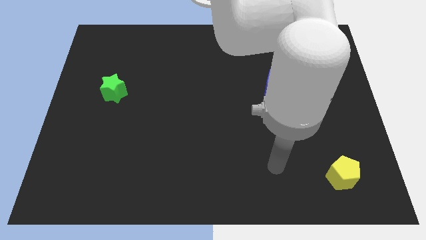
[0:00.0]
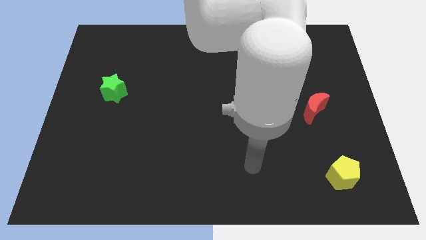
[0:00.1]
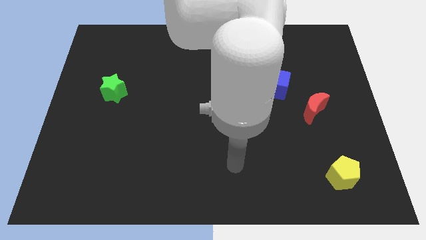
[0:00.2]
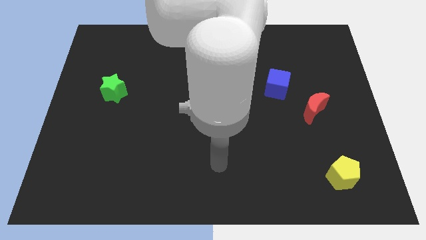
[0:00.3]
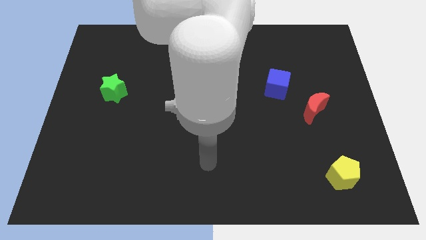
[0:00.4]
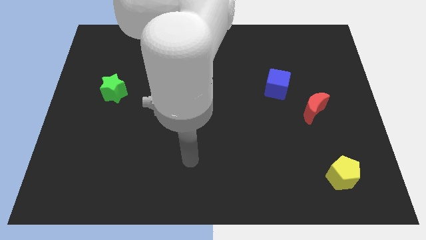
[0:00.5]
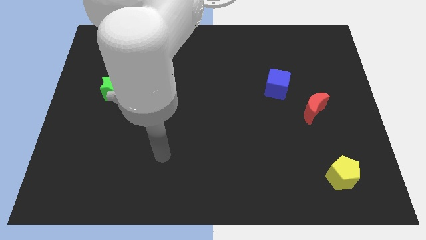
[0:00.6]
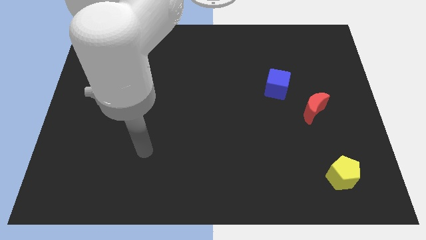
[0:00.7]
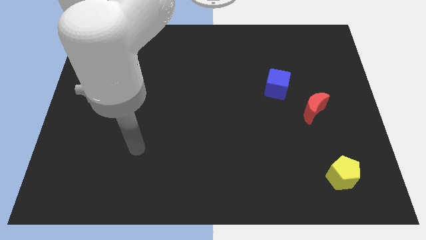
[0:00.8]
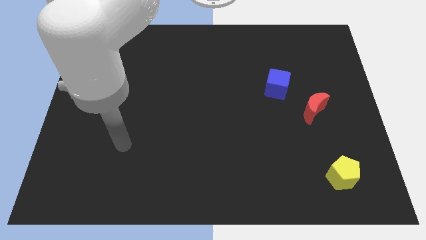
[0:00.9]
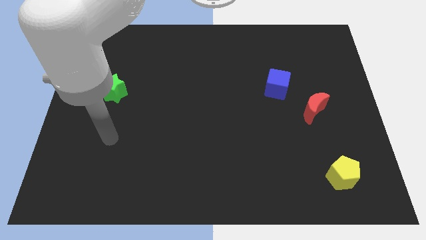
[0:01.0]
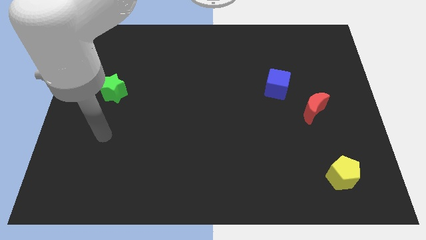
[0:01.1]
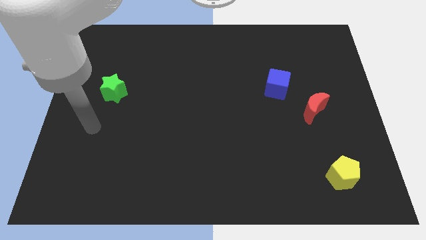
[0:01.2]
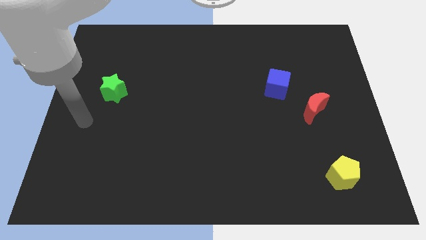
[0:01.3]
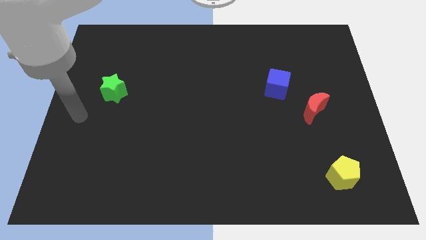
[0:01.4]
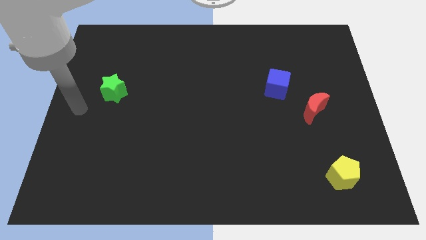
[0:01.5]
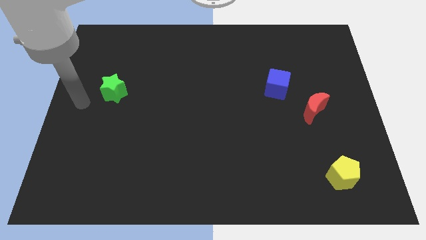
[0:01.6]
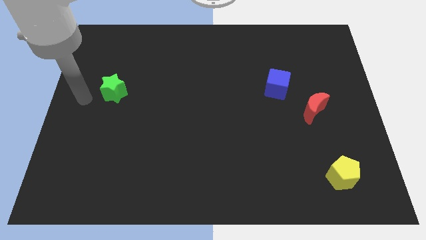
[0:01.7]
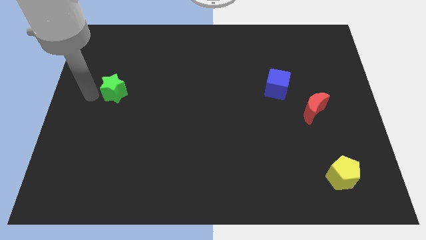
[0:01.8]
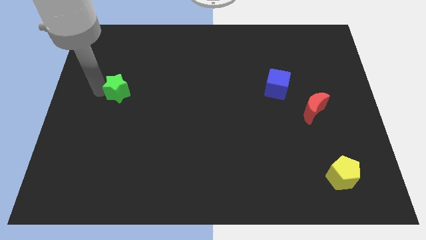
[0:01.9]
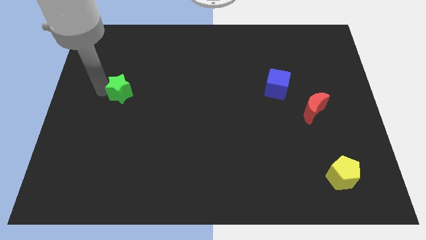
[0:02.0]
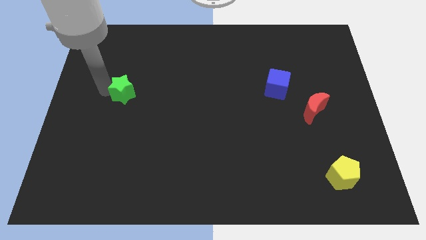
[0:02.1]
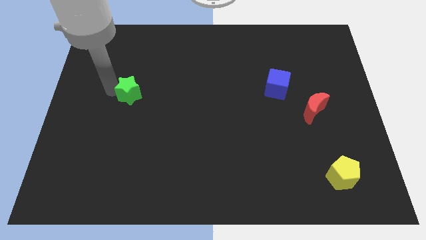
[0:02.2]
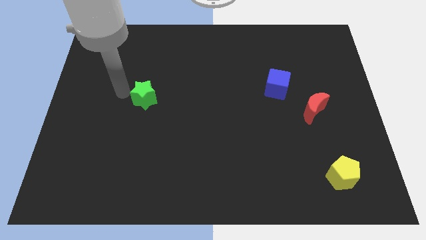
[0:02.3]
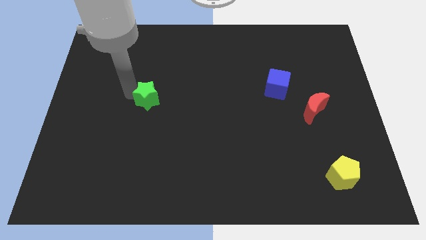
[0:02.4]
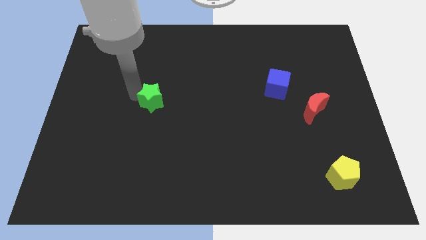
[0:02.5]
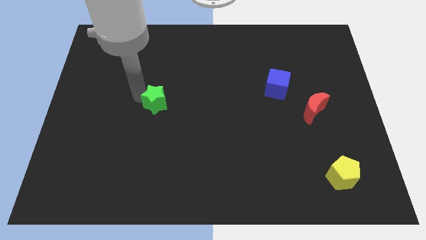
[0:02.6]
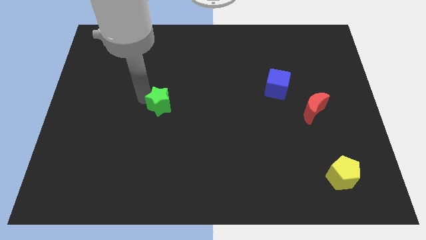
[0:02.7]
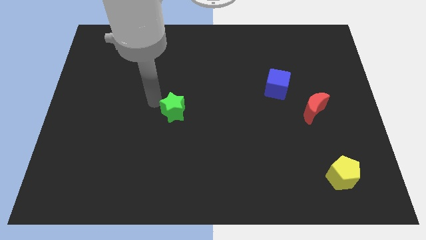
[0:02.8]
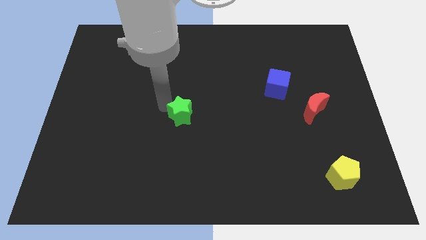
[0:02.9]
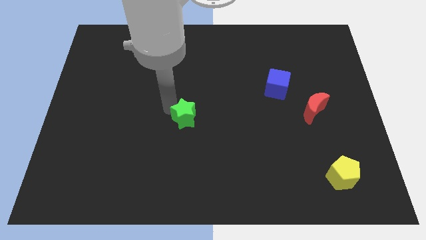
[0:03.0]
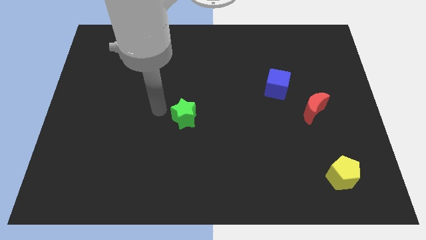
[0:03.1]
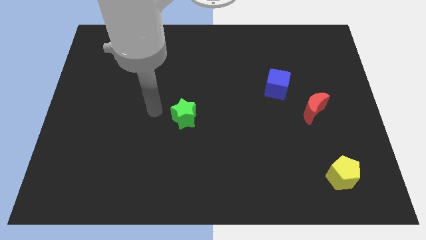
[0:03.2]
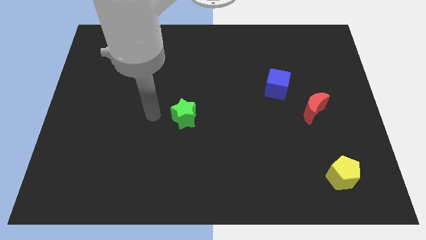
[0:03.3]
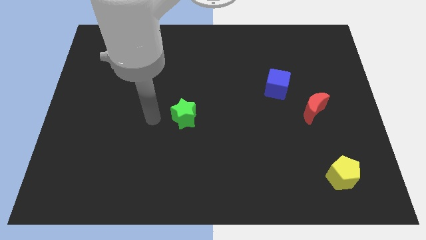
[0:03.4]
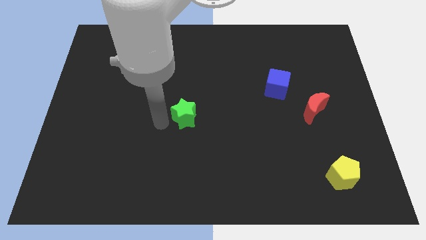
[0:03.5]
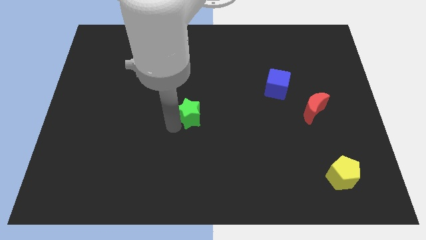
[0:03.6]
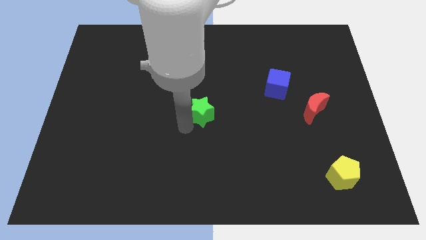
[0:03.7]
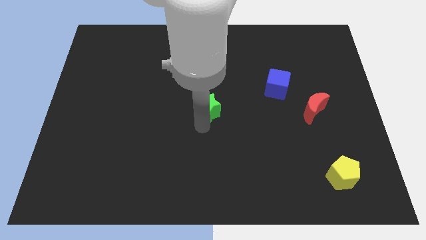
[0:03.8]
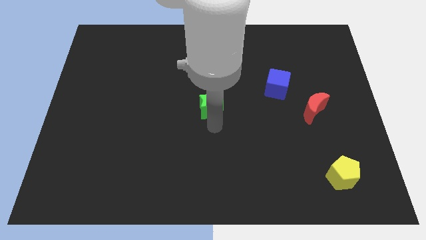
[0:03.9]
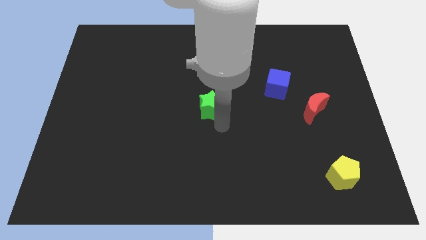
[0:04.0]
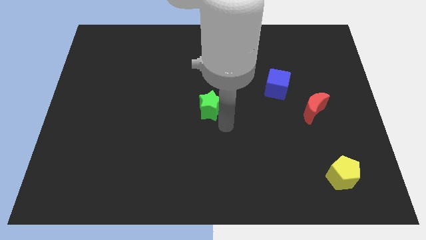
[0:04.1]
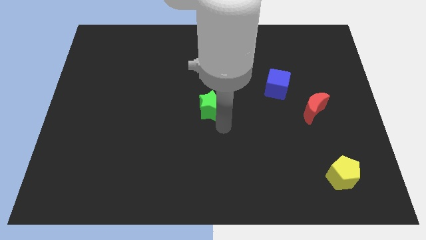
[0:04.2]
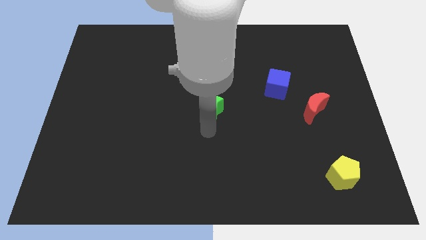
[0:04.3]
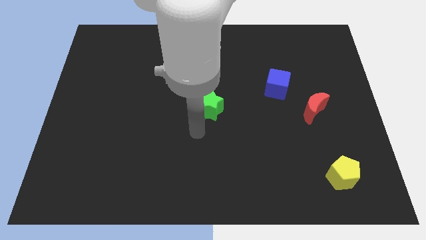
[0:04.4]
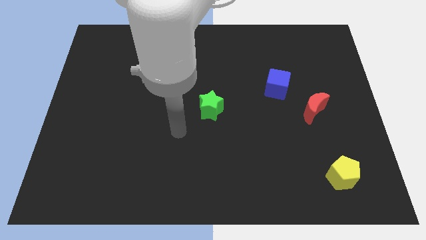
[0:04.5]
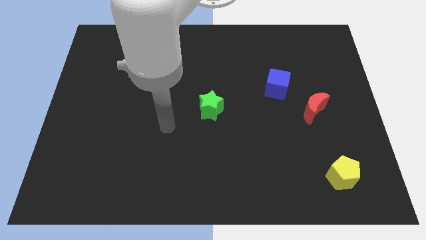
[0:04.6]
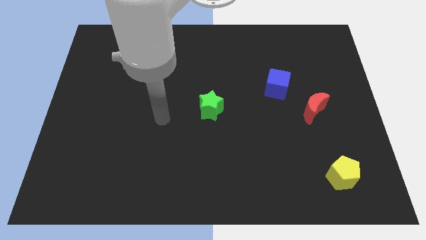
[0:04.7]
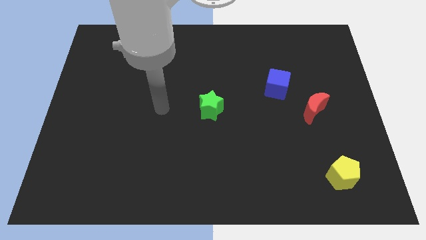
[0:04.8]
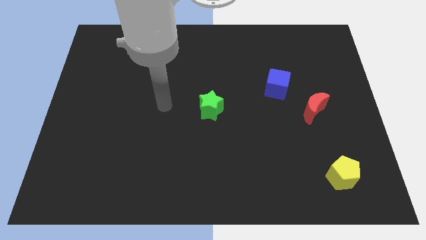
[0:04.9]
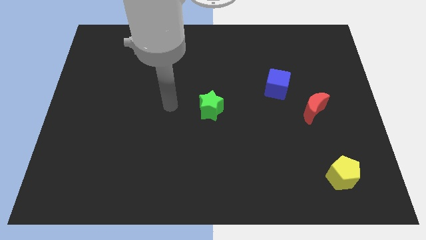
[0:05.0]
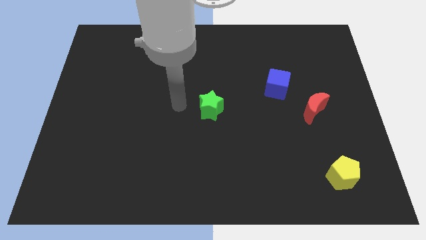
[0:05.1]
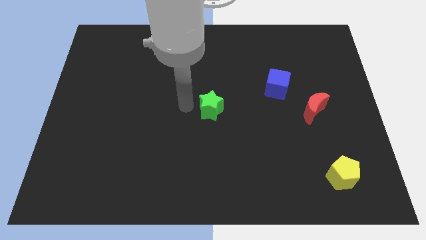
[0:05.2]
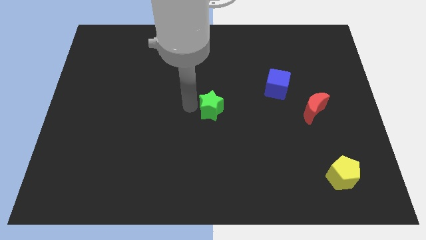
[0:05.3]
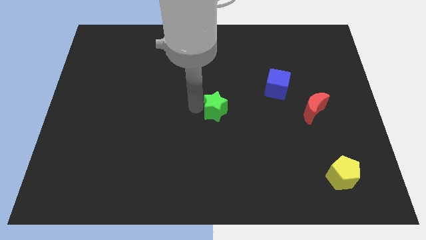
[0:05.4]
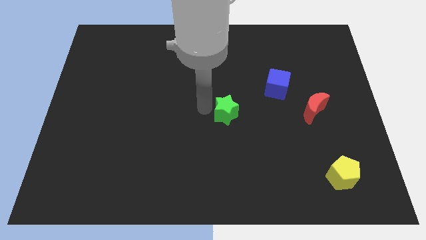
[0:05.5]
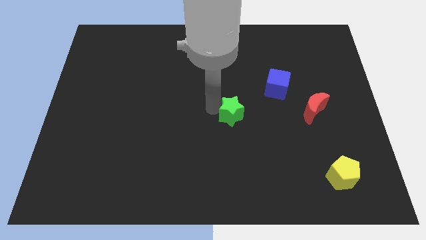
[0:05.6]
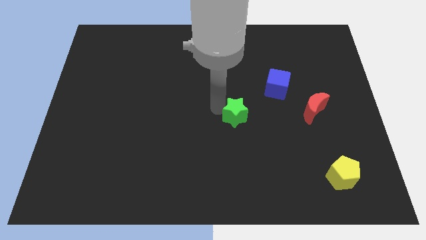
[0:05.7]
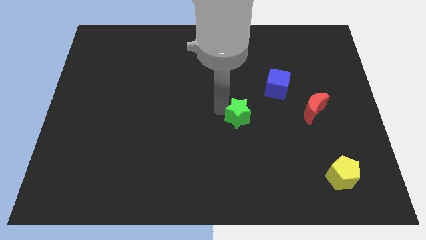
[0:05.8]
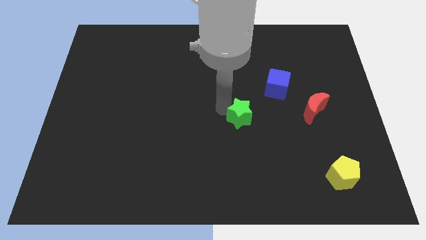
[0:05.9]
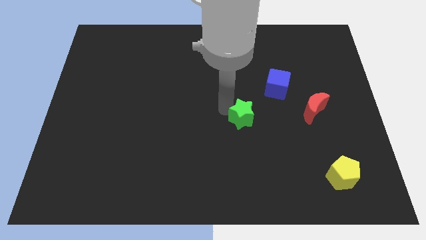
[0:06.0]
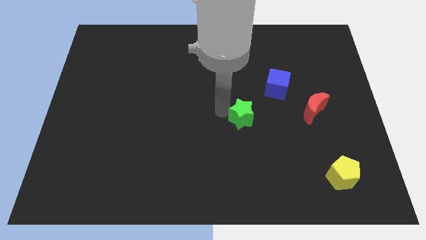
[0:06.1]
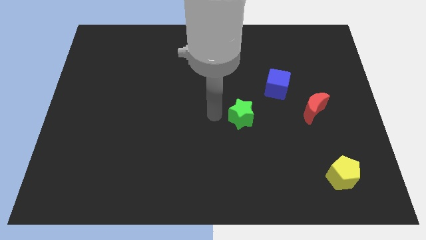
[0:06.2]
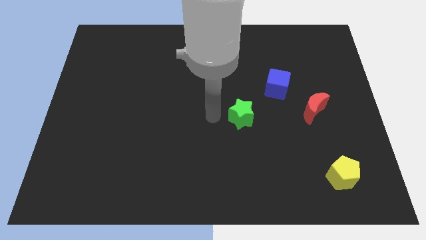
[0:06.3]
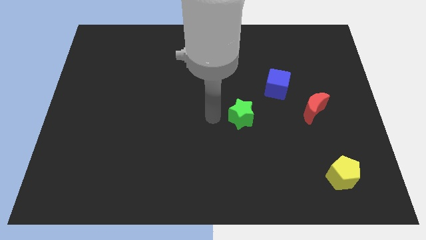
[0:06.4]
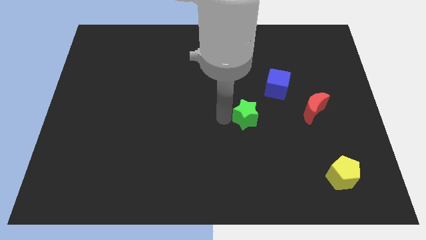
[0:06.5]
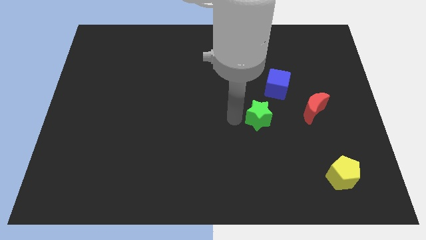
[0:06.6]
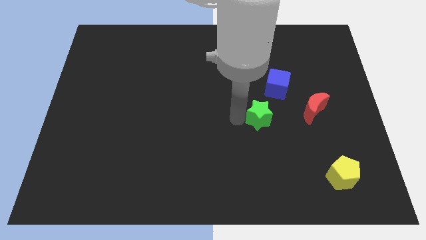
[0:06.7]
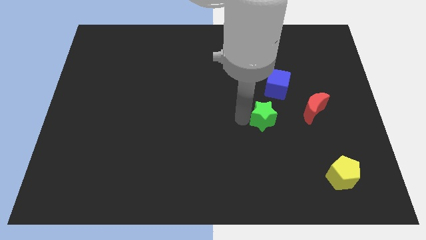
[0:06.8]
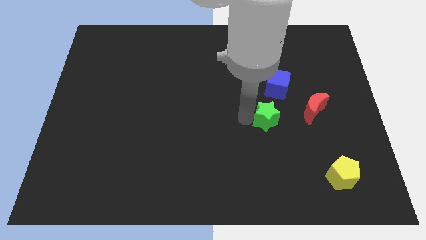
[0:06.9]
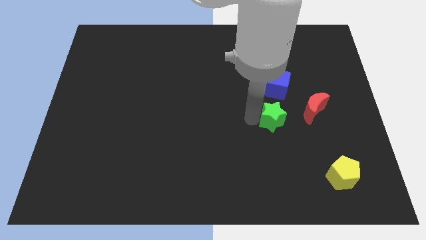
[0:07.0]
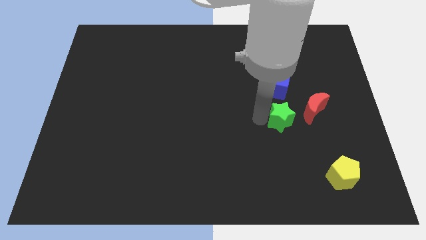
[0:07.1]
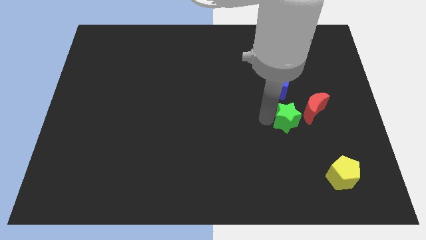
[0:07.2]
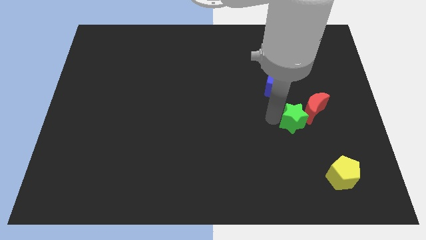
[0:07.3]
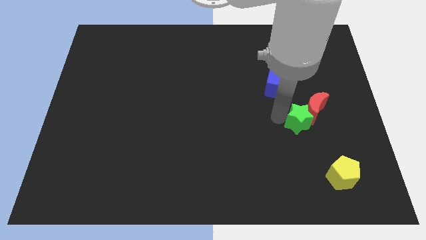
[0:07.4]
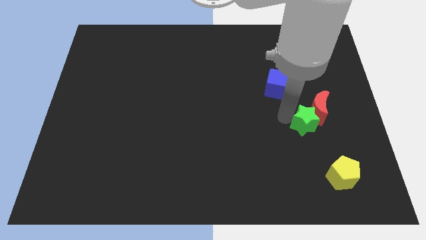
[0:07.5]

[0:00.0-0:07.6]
put the green block to the red moon

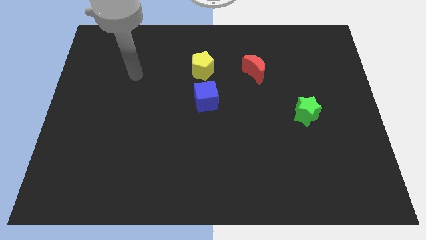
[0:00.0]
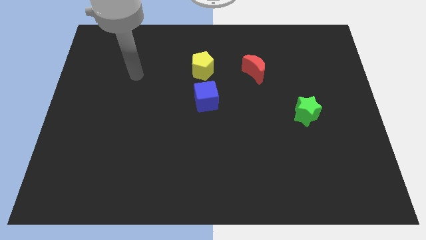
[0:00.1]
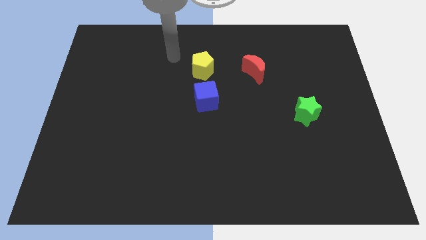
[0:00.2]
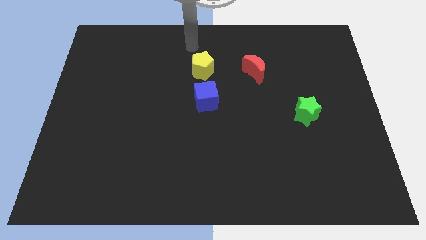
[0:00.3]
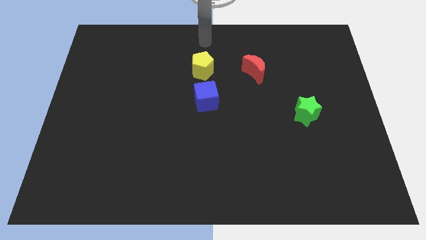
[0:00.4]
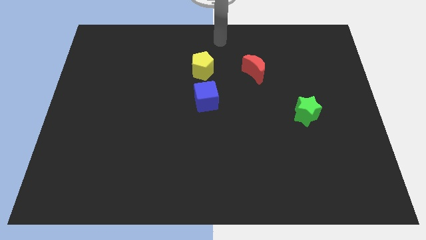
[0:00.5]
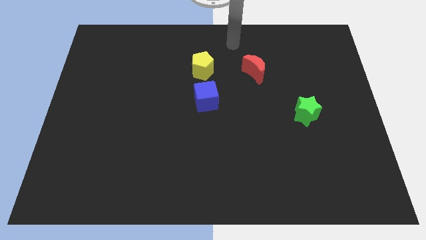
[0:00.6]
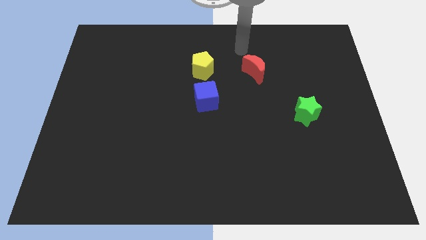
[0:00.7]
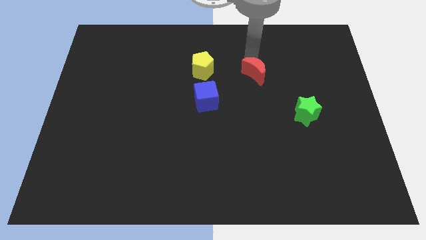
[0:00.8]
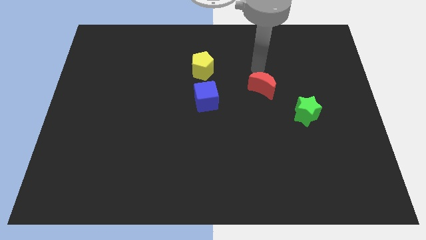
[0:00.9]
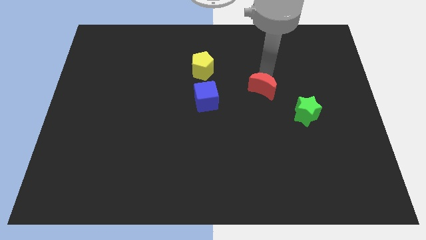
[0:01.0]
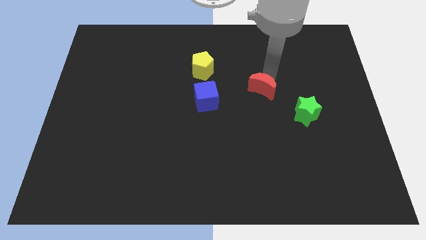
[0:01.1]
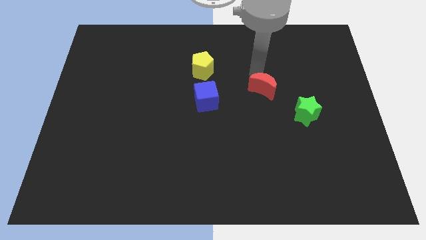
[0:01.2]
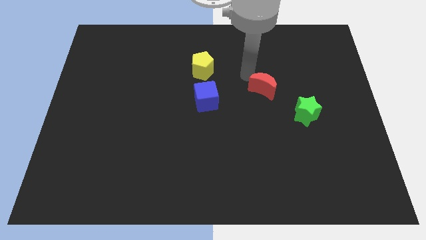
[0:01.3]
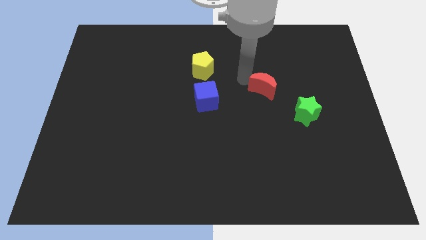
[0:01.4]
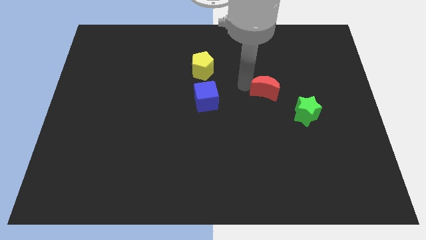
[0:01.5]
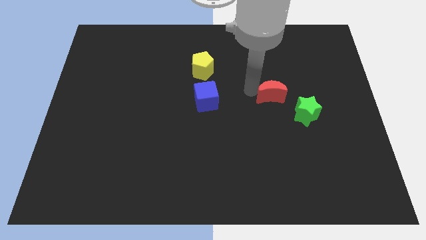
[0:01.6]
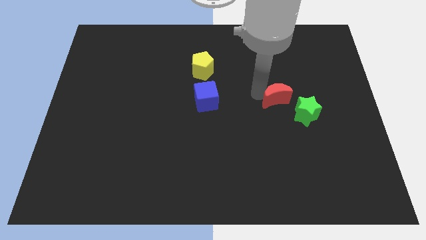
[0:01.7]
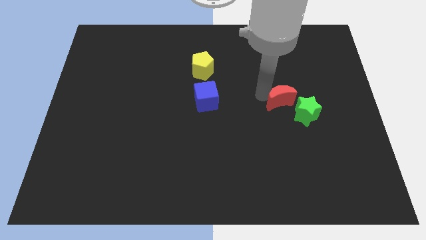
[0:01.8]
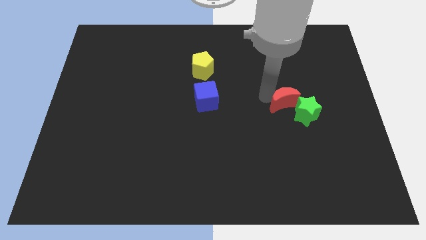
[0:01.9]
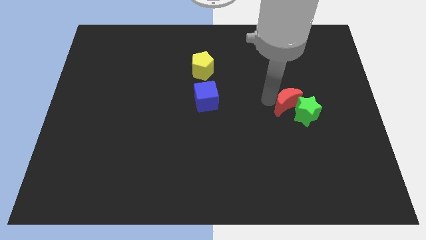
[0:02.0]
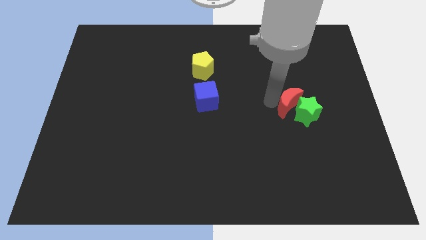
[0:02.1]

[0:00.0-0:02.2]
move the moon close to the star
